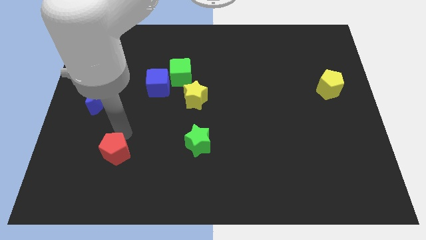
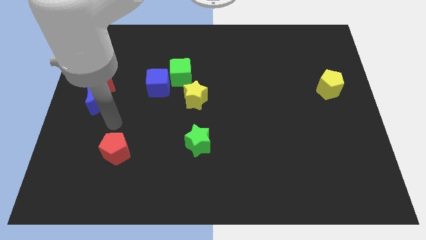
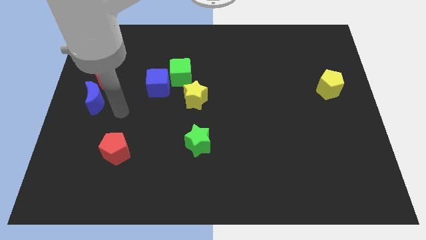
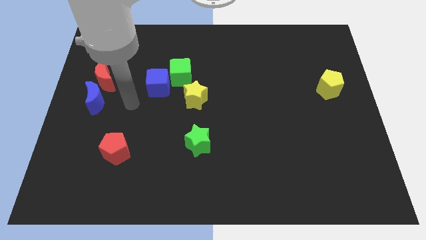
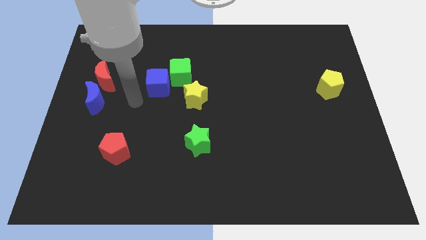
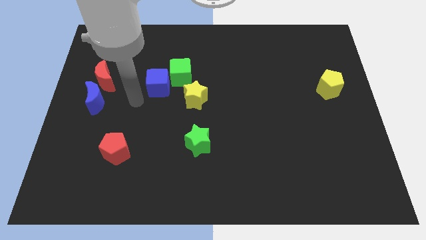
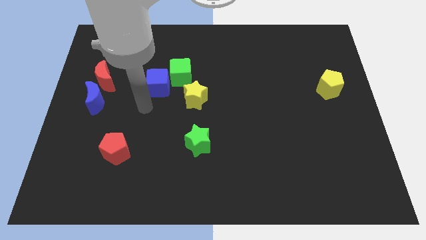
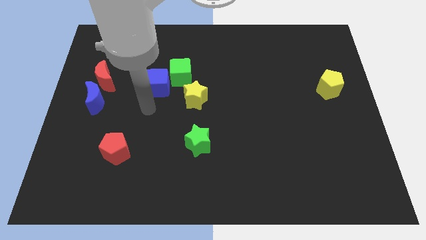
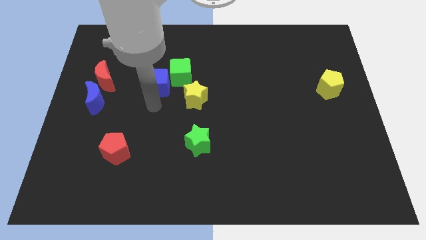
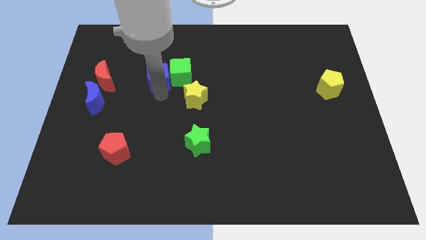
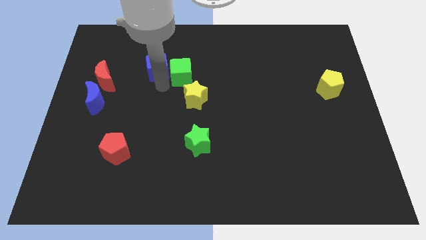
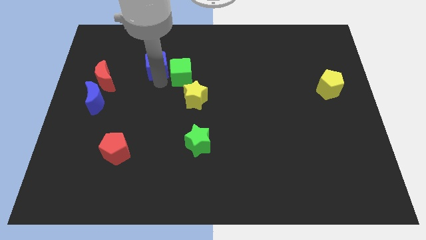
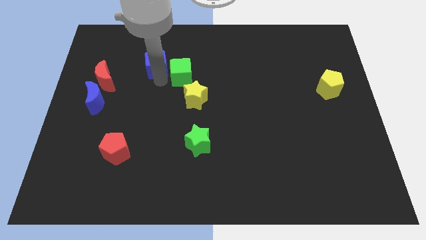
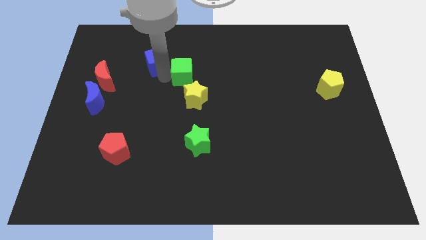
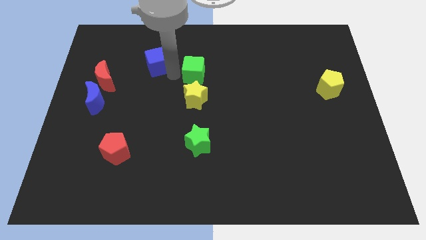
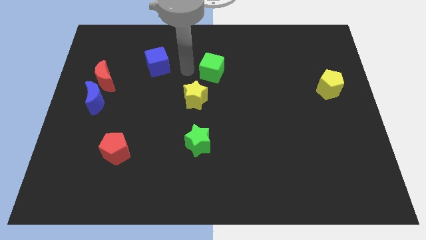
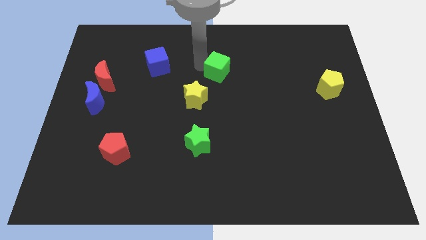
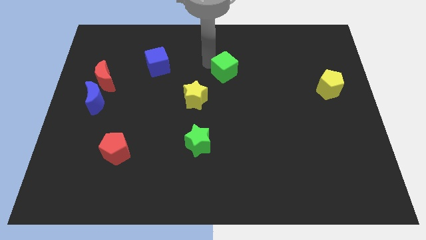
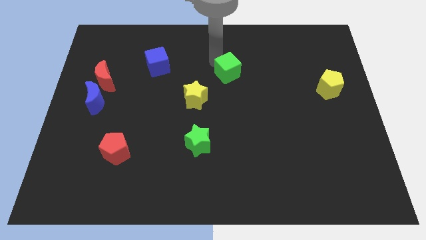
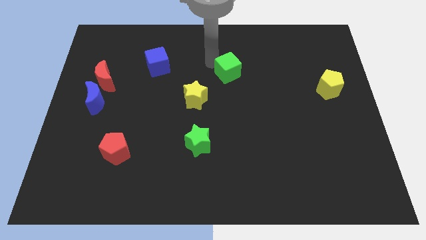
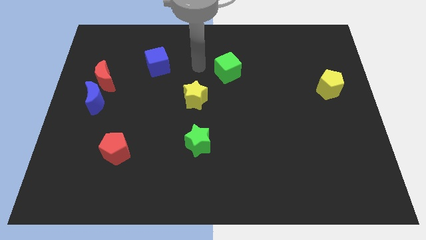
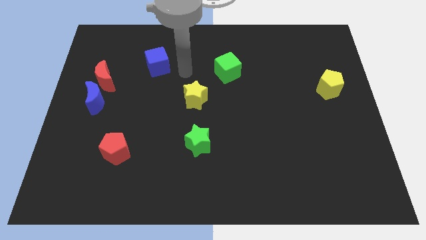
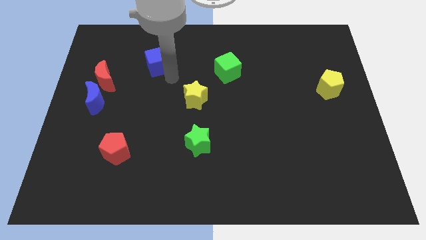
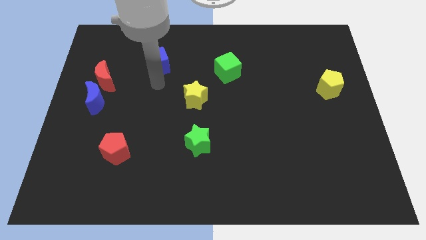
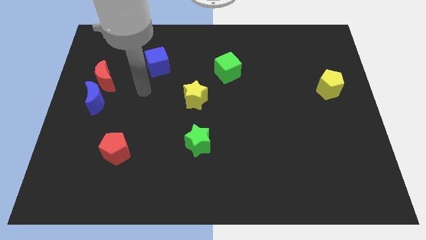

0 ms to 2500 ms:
push the blue cube and green cube away from each other

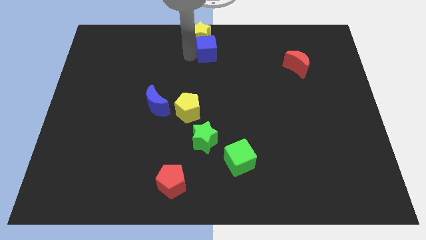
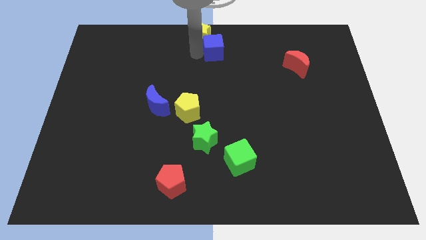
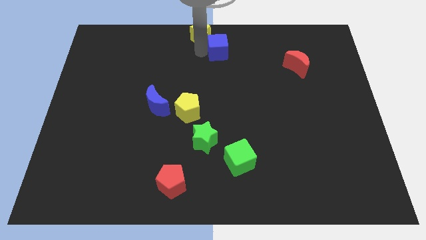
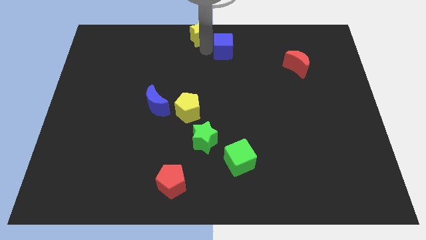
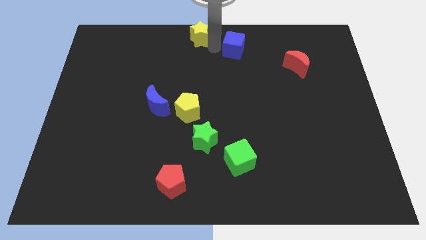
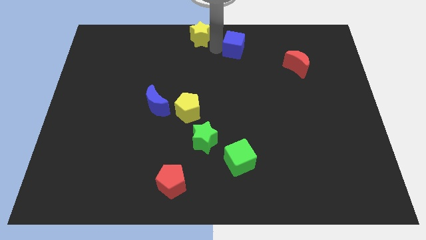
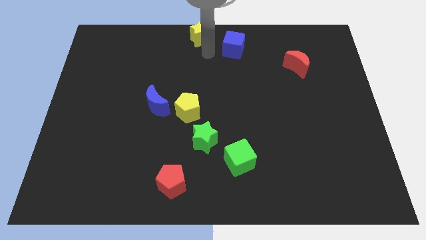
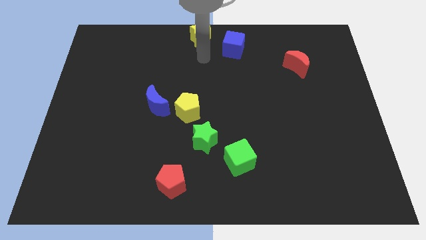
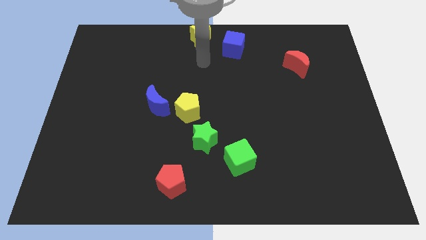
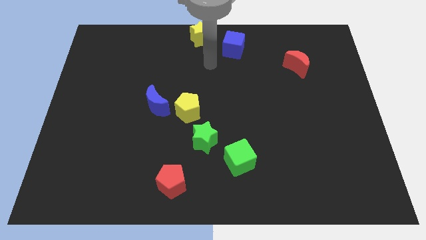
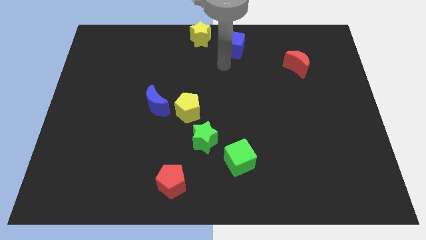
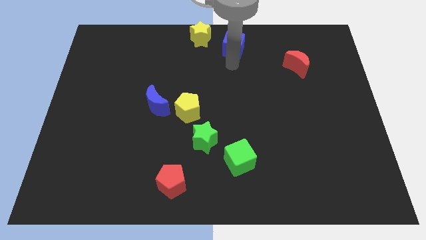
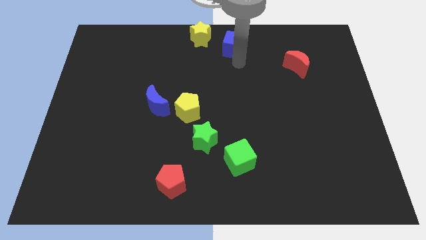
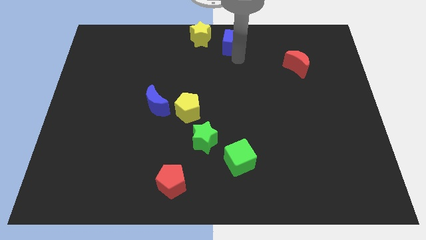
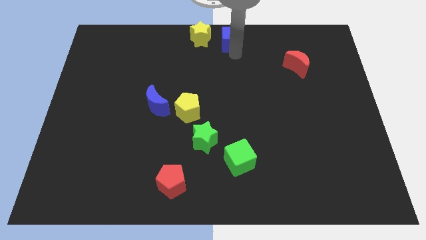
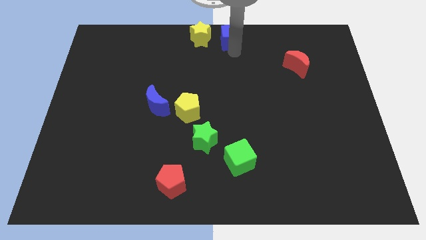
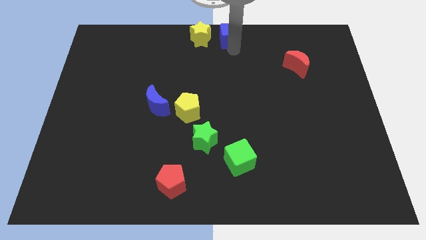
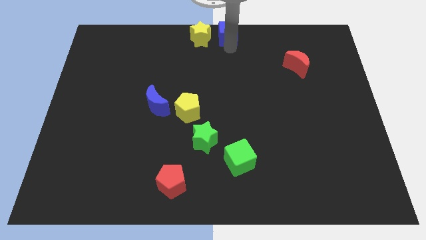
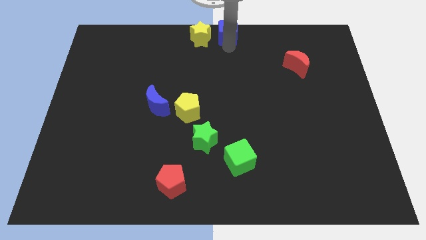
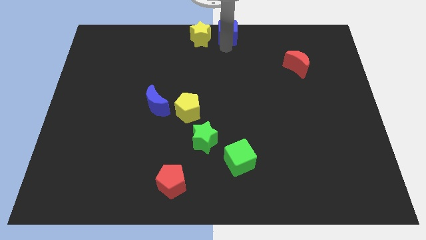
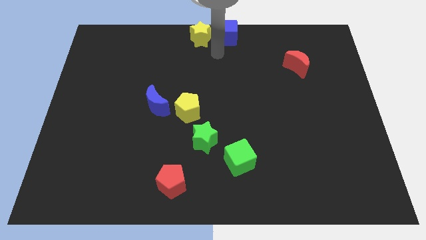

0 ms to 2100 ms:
put the blue cube to the right of the yellow star

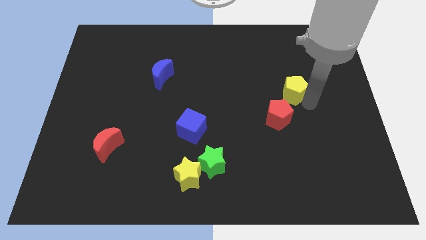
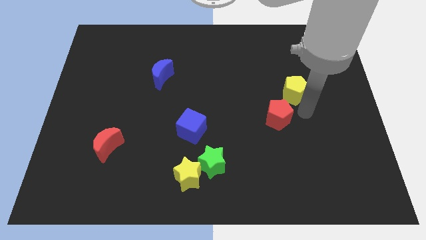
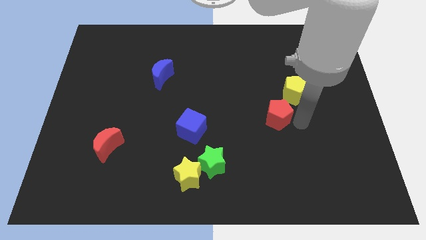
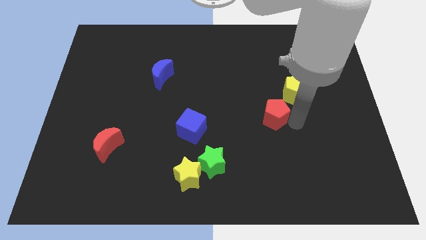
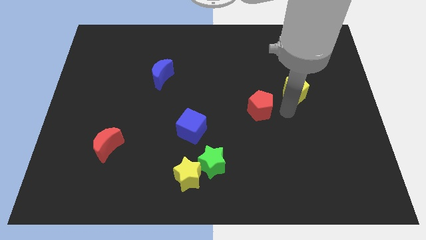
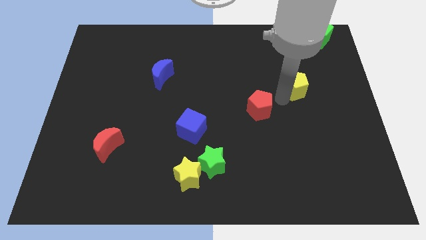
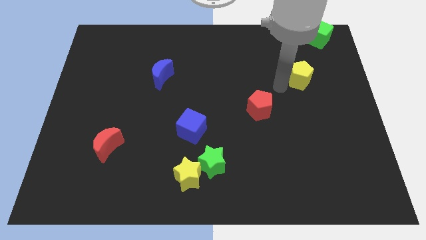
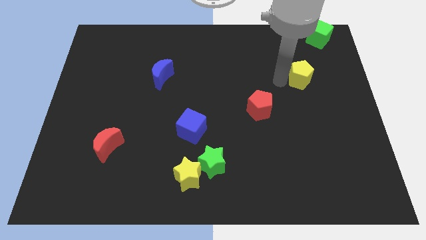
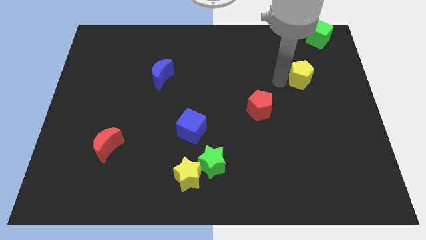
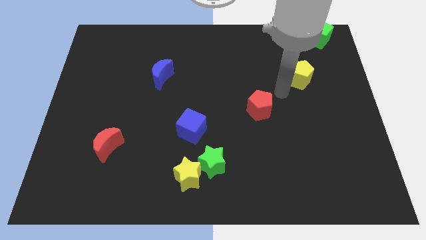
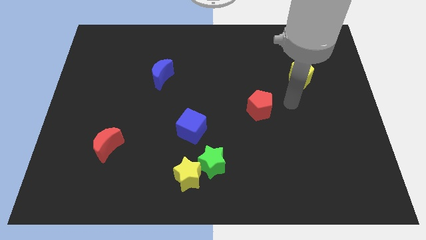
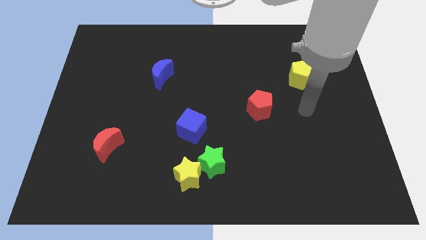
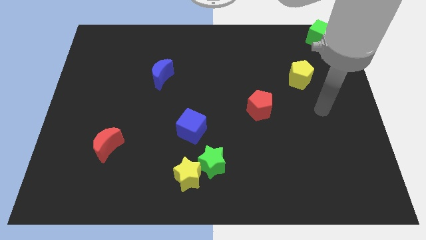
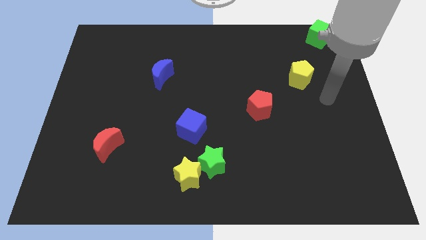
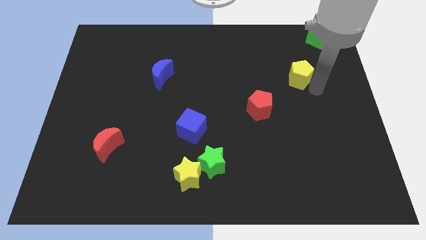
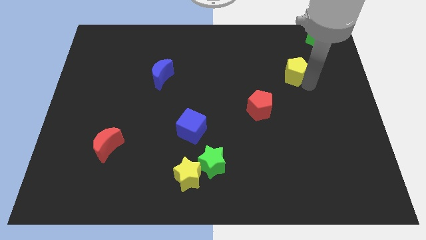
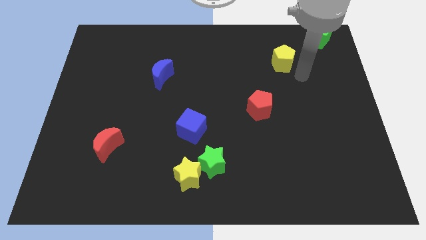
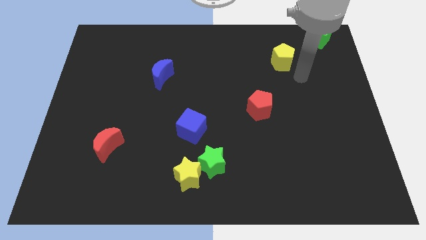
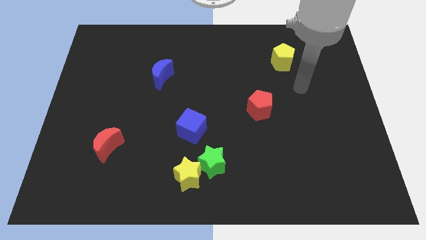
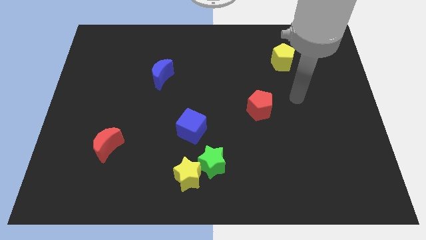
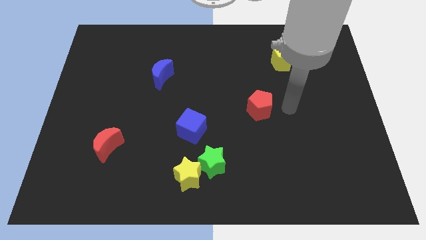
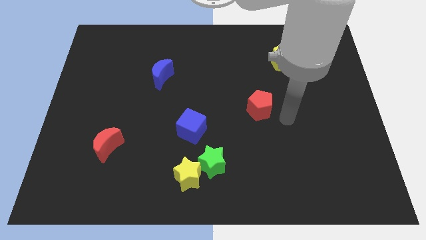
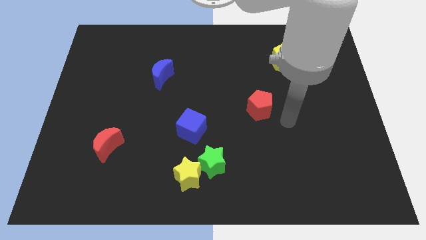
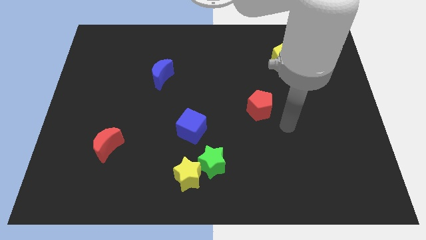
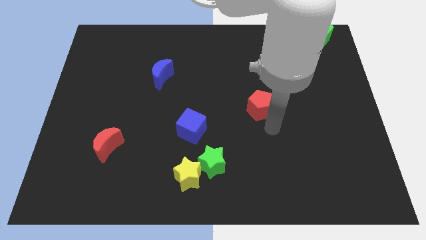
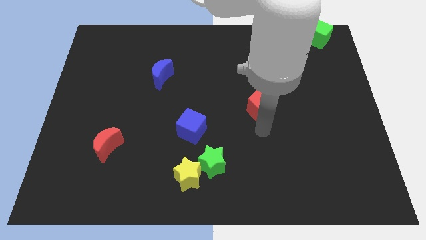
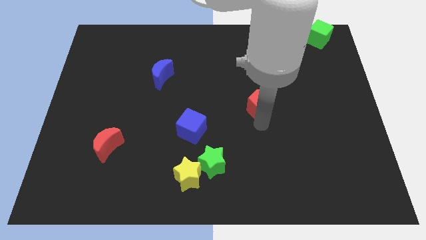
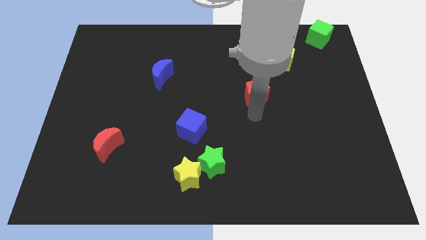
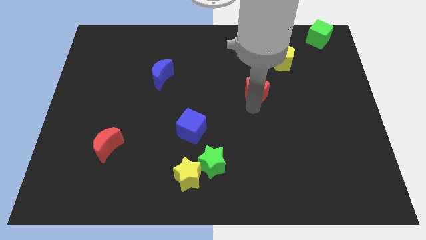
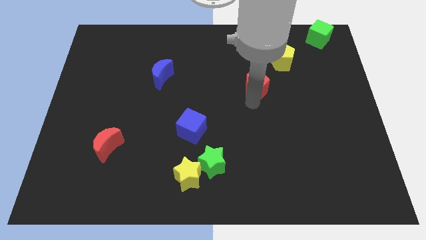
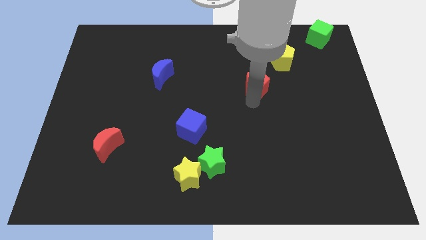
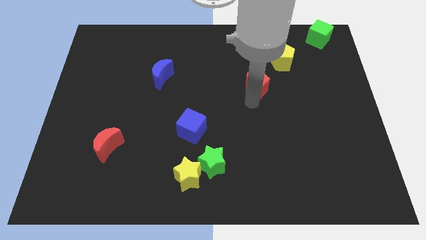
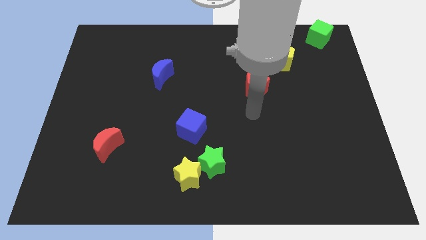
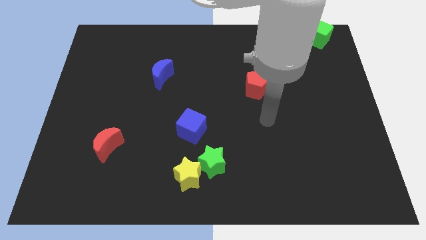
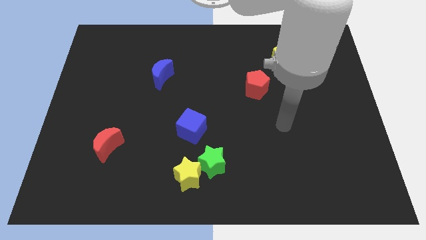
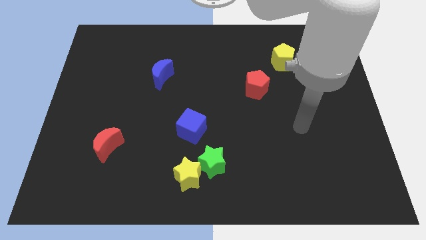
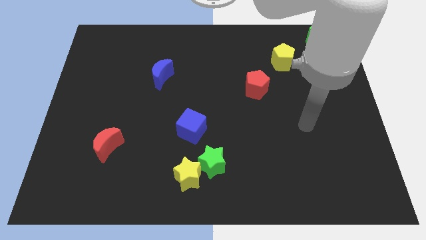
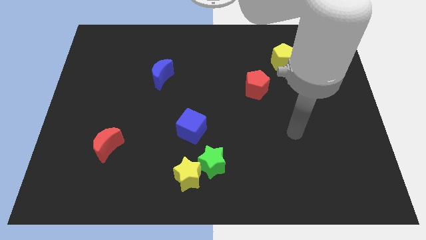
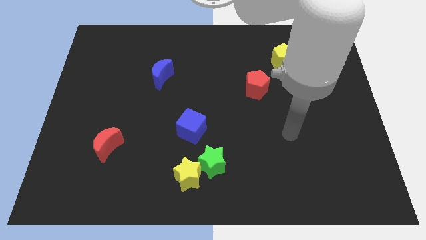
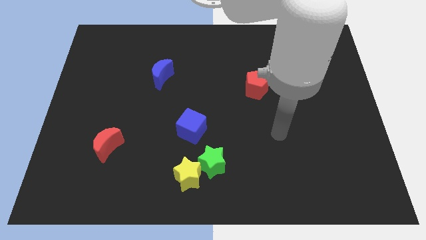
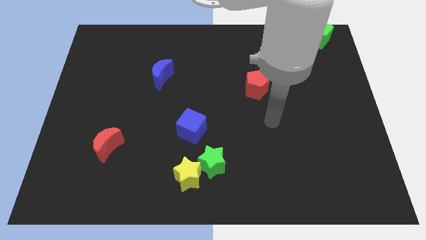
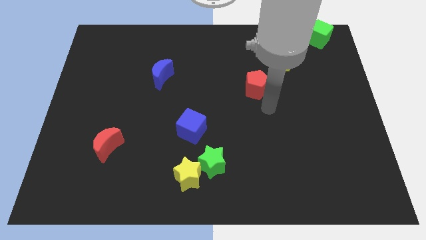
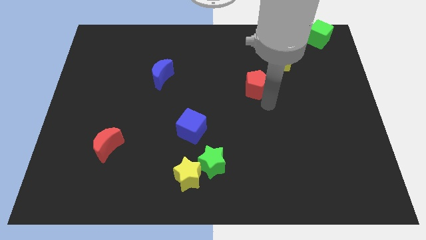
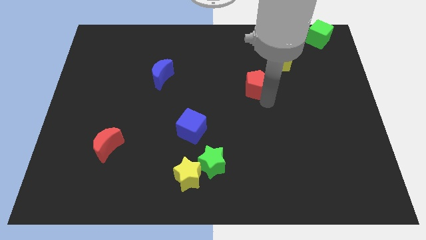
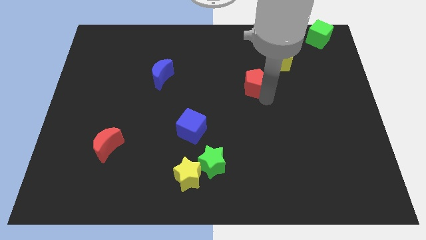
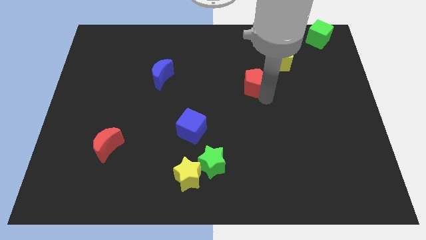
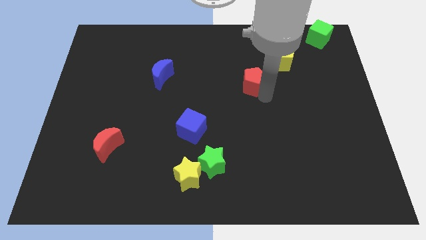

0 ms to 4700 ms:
move the red pentagon and yellow pentagon towards the top left of the board
